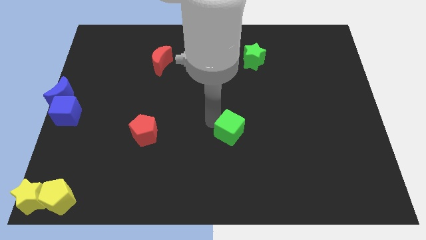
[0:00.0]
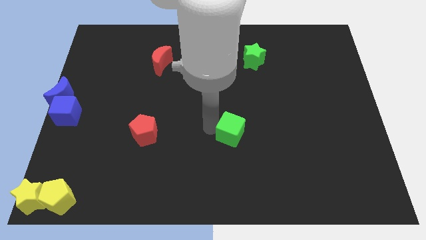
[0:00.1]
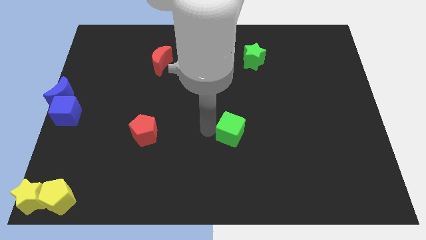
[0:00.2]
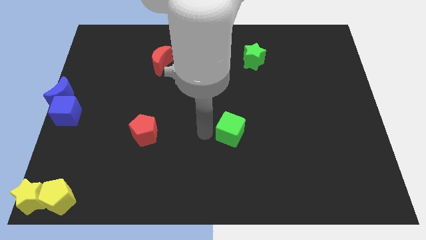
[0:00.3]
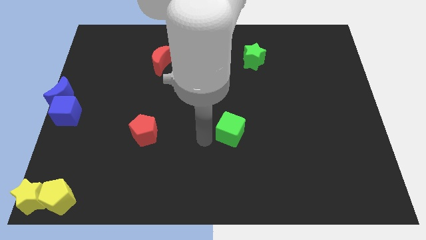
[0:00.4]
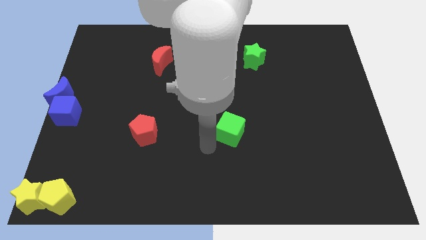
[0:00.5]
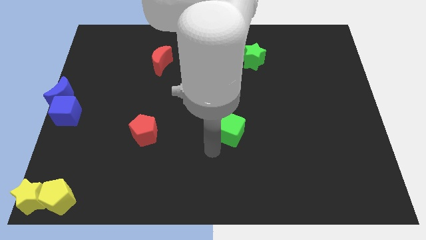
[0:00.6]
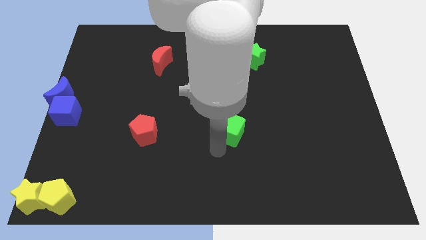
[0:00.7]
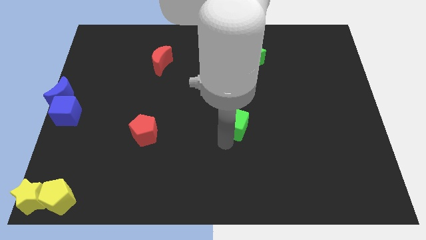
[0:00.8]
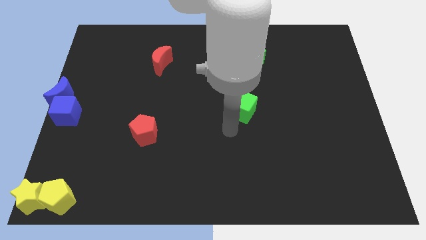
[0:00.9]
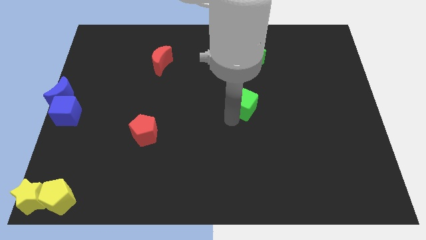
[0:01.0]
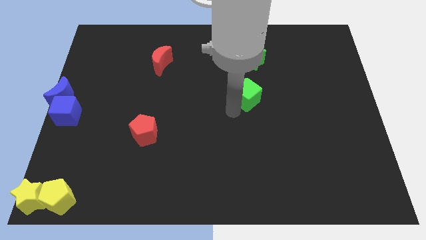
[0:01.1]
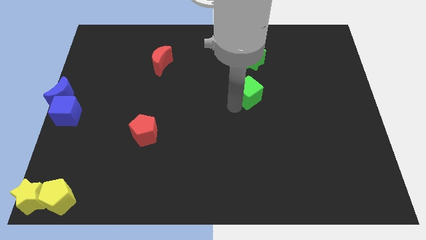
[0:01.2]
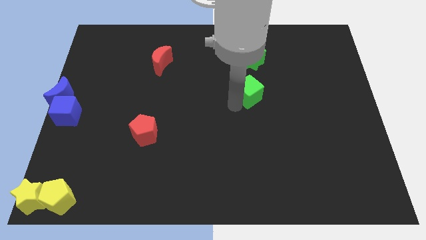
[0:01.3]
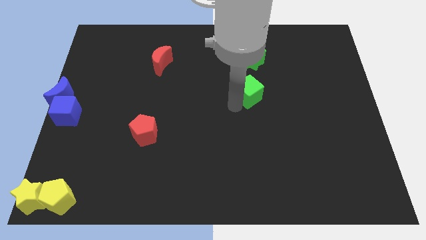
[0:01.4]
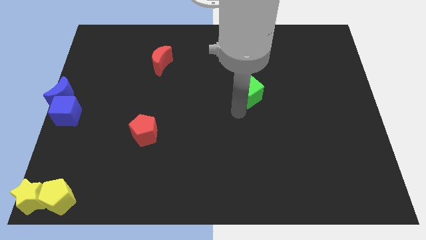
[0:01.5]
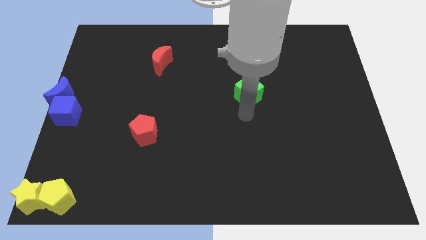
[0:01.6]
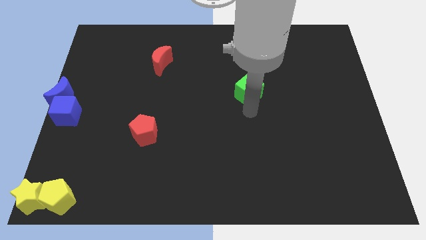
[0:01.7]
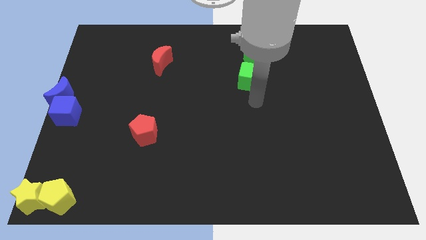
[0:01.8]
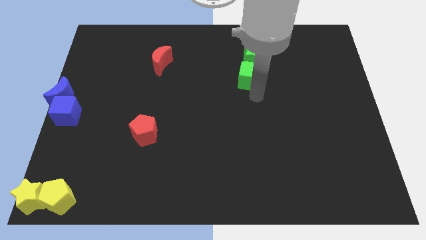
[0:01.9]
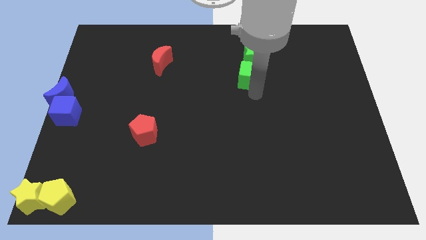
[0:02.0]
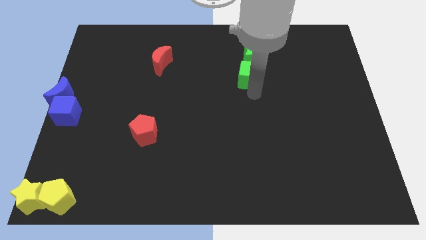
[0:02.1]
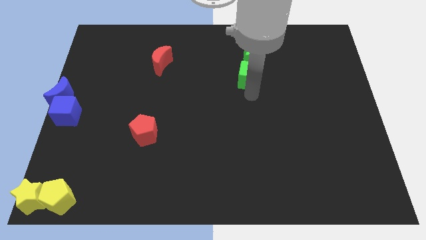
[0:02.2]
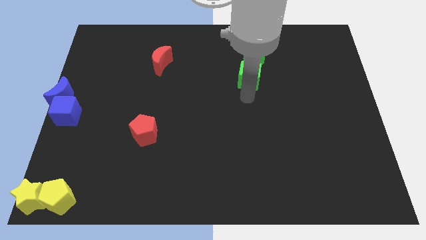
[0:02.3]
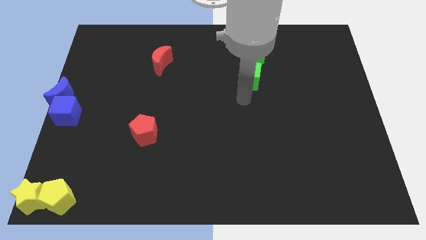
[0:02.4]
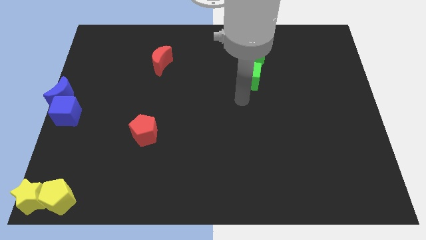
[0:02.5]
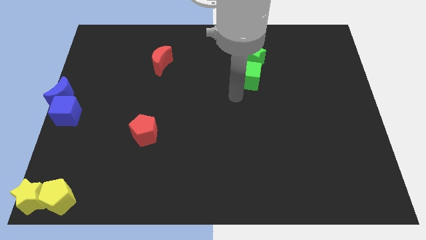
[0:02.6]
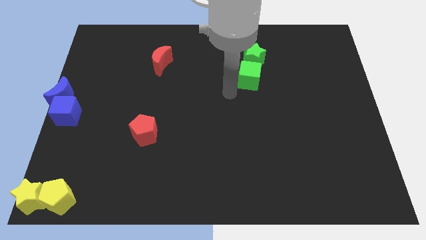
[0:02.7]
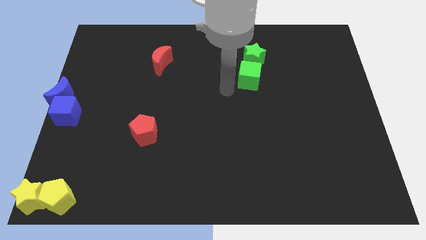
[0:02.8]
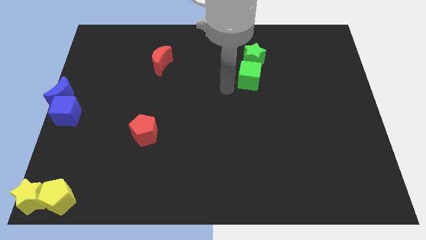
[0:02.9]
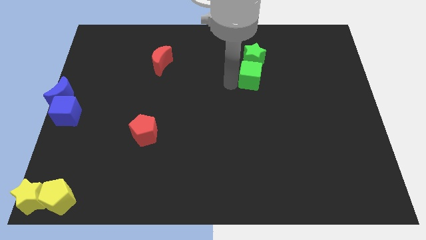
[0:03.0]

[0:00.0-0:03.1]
move the green cube close to the bottom side of the green star

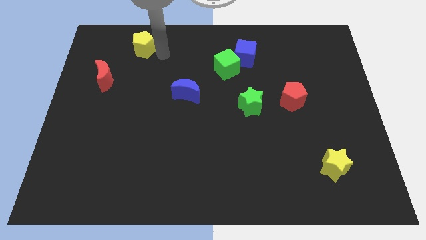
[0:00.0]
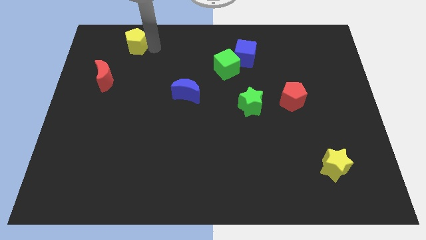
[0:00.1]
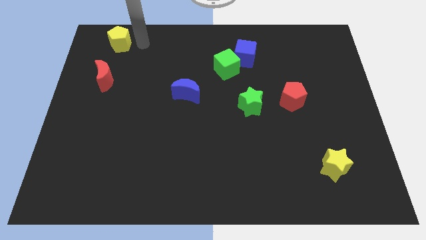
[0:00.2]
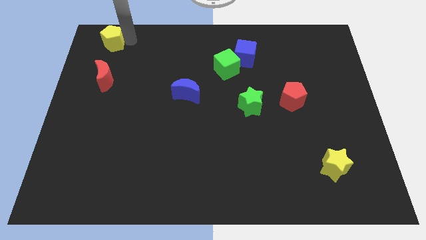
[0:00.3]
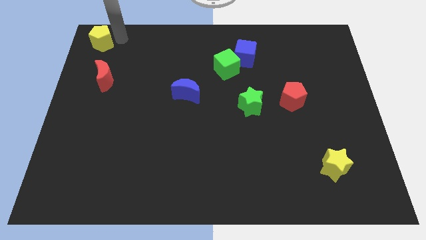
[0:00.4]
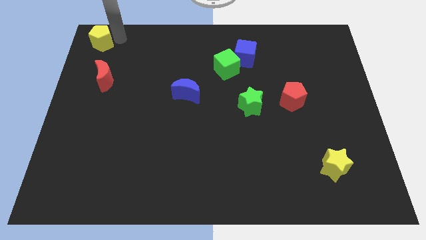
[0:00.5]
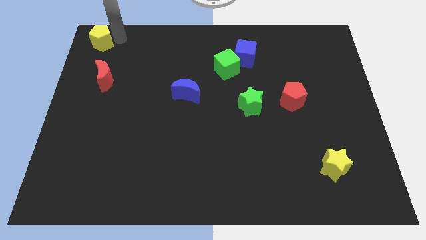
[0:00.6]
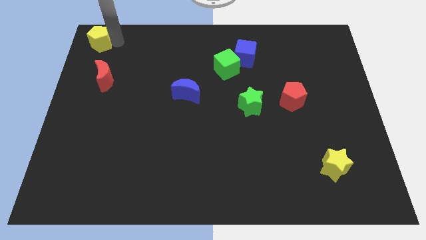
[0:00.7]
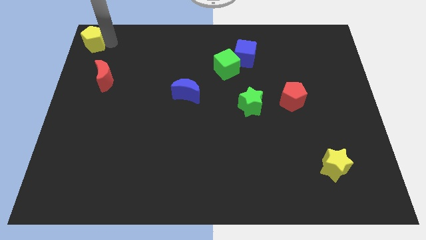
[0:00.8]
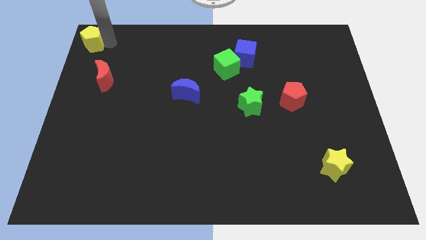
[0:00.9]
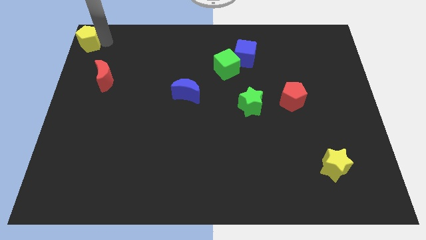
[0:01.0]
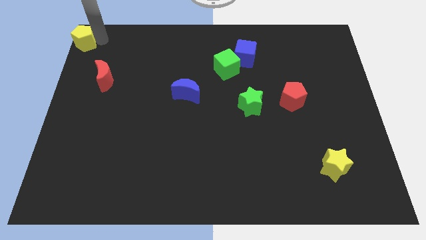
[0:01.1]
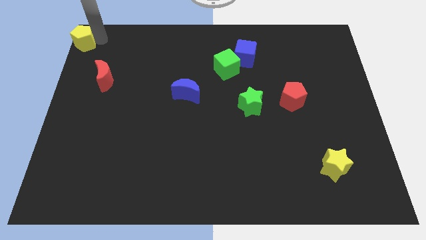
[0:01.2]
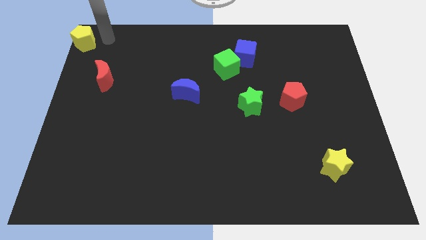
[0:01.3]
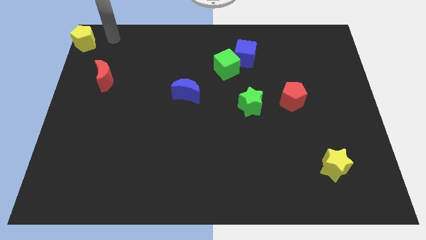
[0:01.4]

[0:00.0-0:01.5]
place the yellow pentagon diagonally top left to the red moon

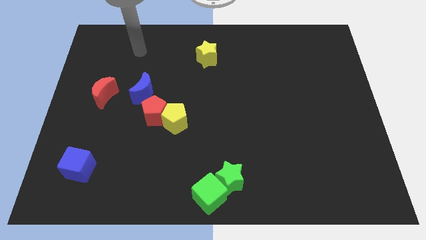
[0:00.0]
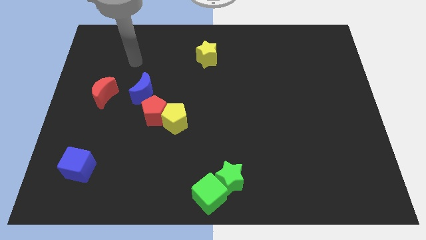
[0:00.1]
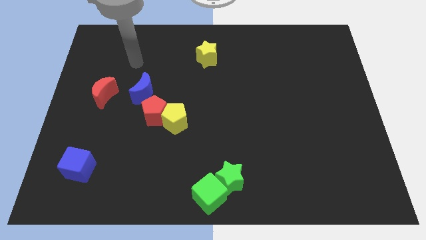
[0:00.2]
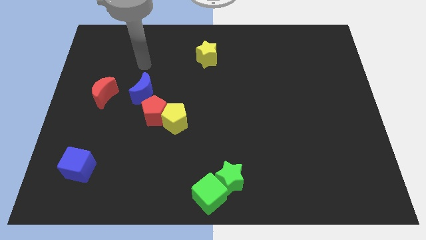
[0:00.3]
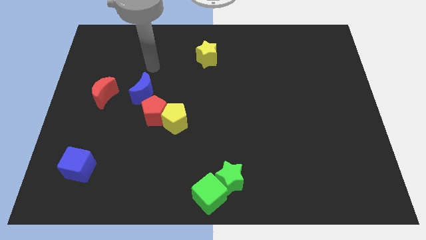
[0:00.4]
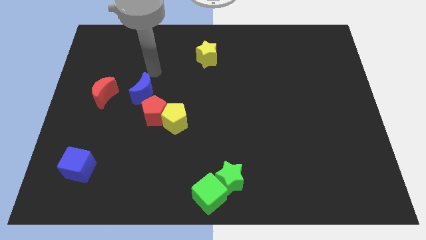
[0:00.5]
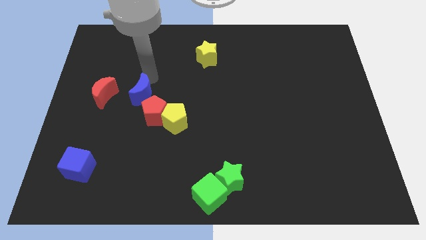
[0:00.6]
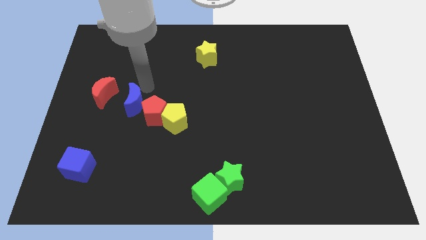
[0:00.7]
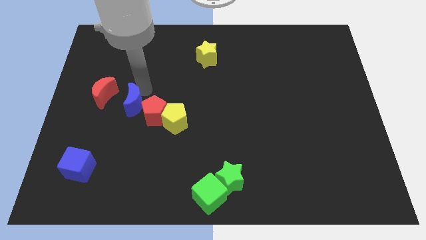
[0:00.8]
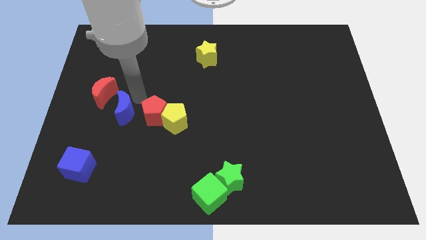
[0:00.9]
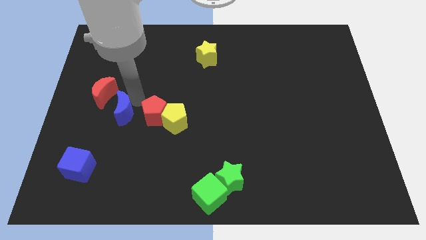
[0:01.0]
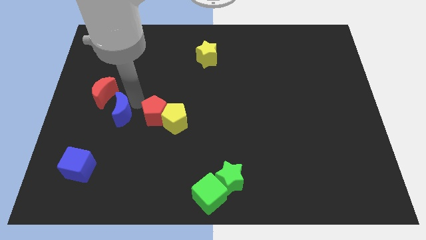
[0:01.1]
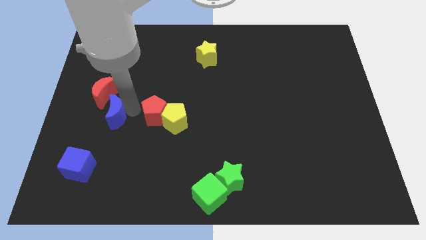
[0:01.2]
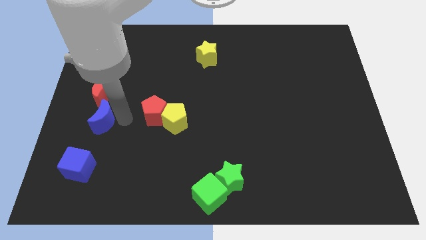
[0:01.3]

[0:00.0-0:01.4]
move the blue moon to the bottom right side of the red moon

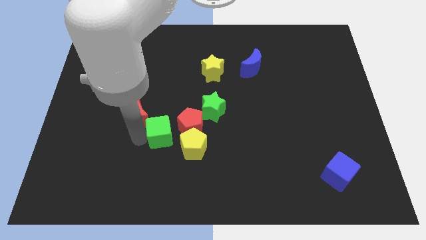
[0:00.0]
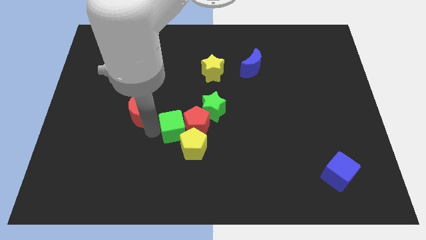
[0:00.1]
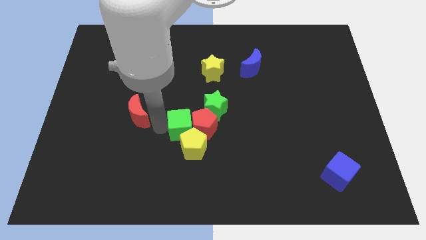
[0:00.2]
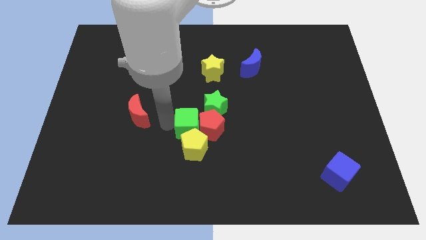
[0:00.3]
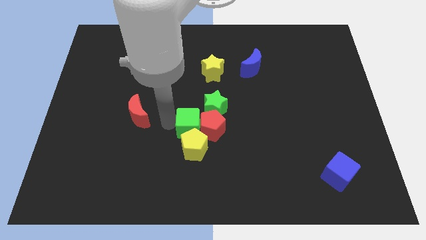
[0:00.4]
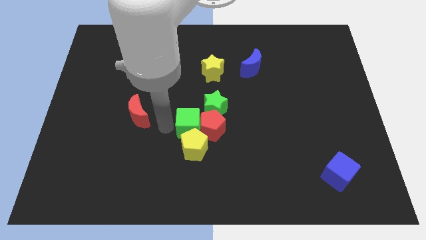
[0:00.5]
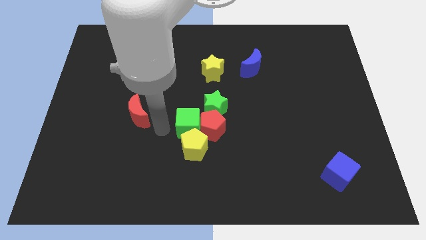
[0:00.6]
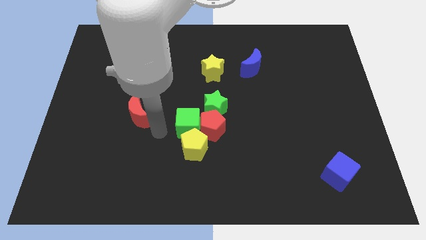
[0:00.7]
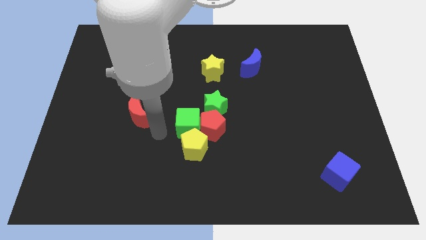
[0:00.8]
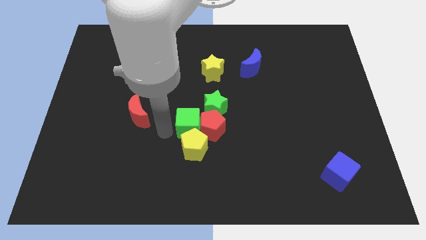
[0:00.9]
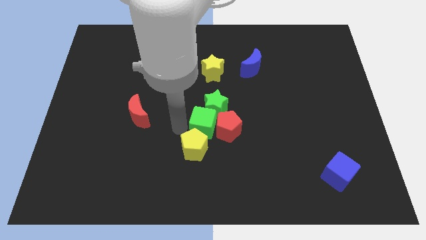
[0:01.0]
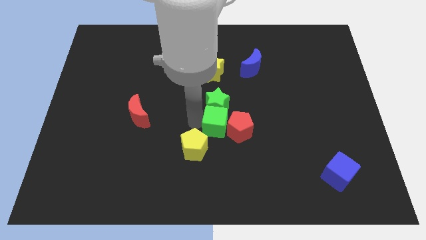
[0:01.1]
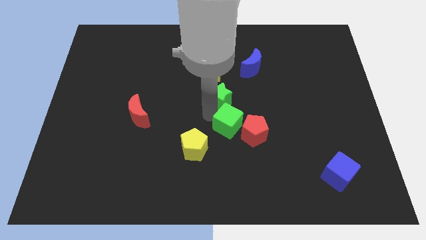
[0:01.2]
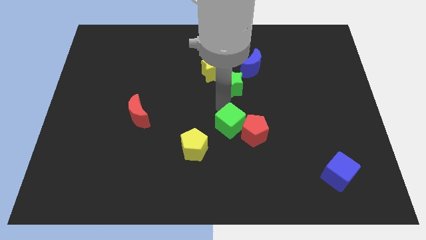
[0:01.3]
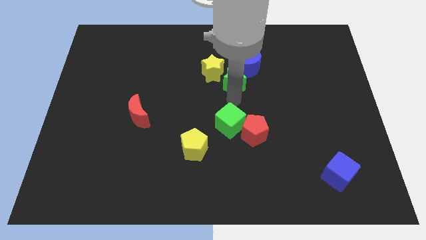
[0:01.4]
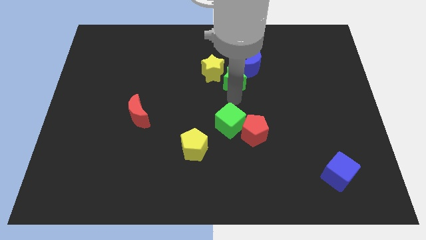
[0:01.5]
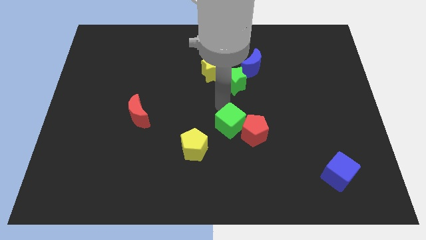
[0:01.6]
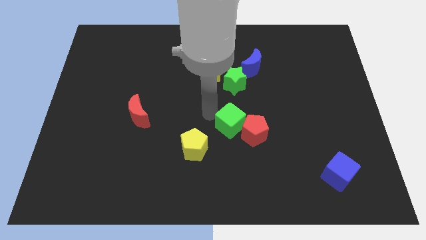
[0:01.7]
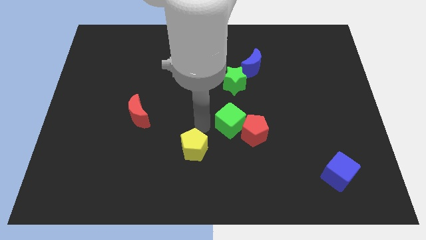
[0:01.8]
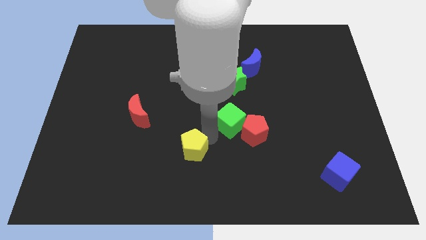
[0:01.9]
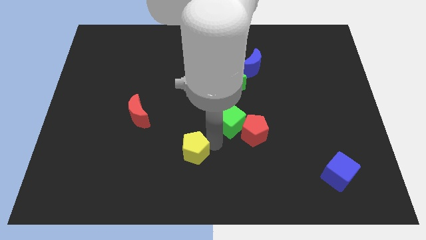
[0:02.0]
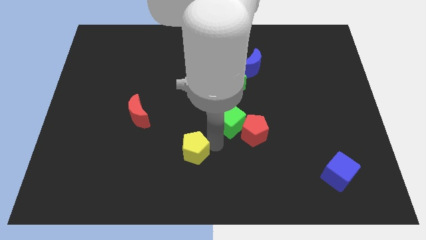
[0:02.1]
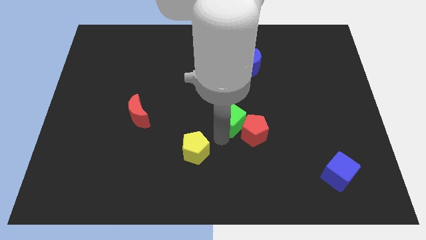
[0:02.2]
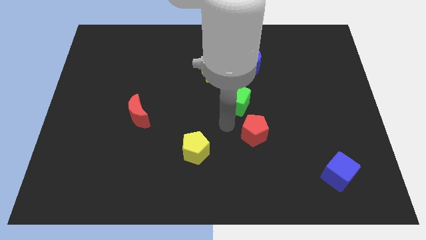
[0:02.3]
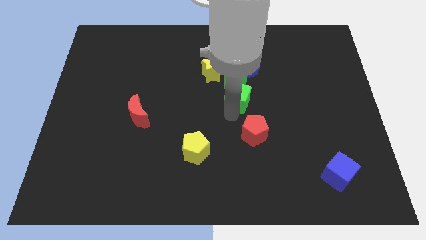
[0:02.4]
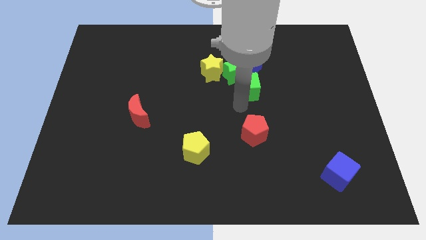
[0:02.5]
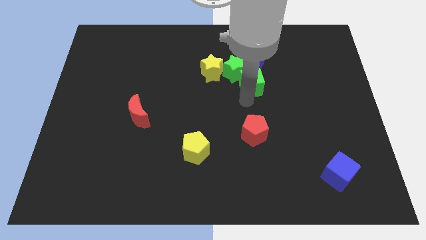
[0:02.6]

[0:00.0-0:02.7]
push green square towards upward

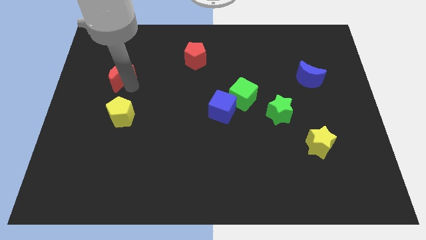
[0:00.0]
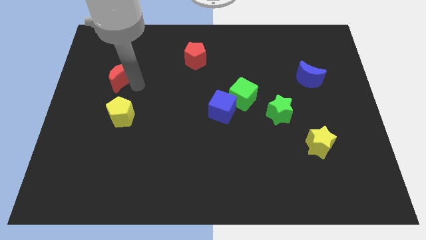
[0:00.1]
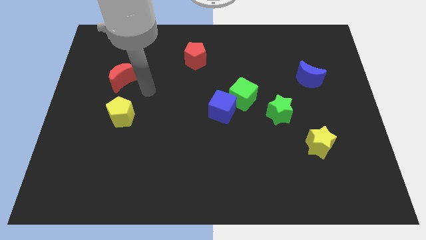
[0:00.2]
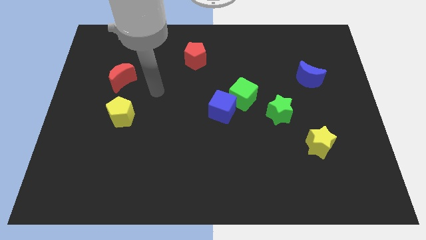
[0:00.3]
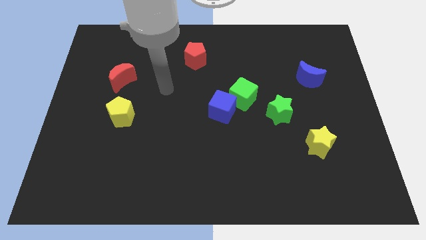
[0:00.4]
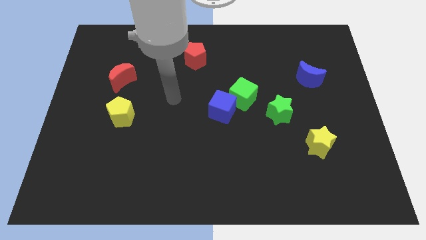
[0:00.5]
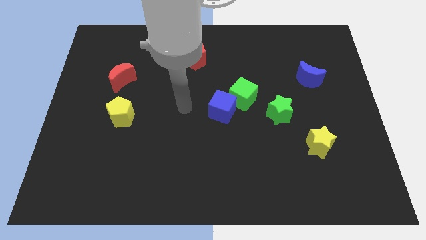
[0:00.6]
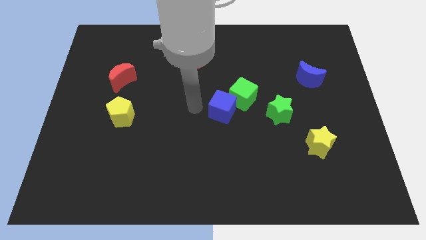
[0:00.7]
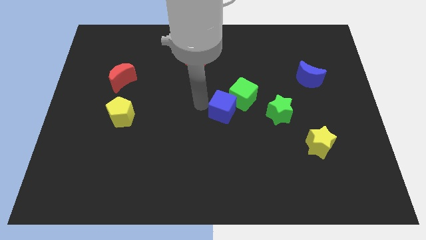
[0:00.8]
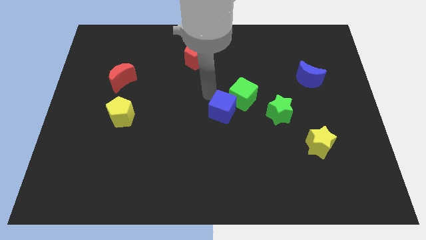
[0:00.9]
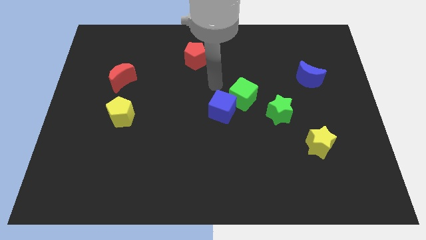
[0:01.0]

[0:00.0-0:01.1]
move arm to the top of the blue cube
